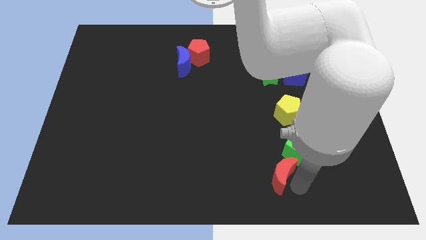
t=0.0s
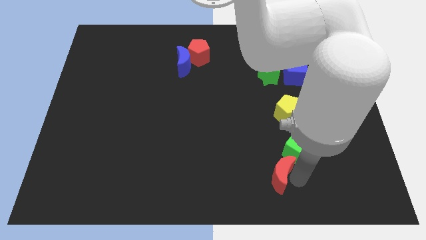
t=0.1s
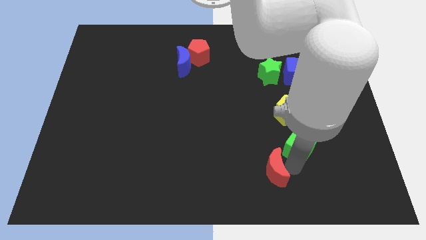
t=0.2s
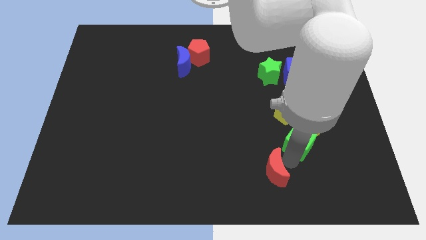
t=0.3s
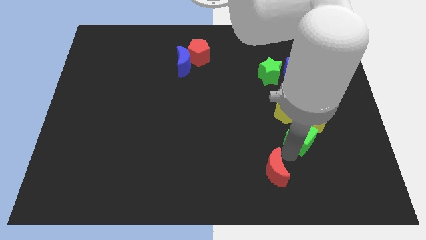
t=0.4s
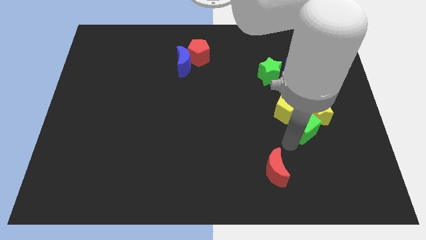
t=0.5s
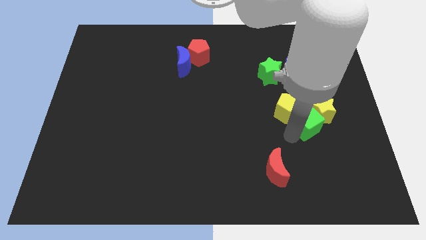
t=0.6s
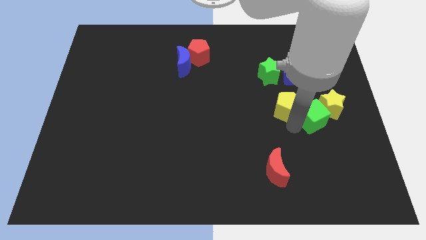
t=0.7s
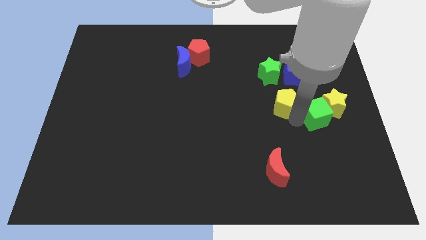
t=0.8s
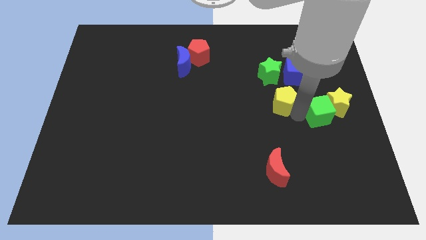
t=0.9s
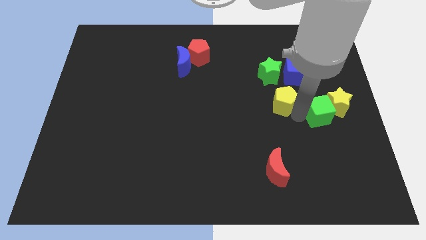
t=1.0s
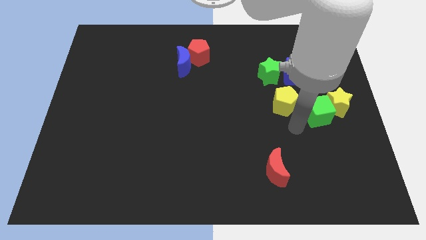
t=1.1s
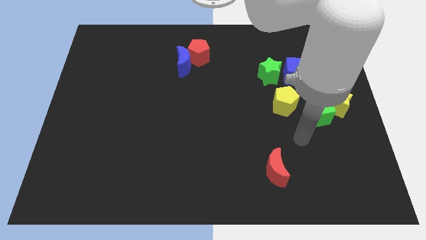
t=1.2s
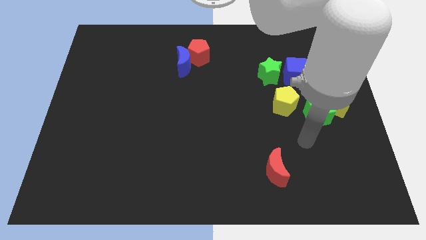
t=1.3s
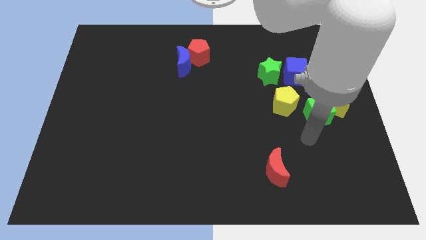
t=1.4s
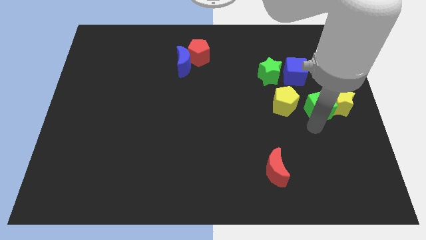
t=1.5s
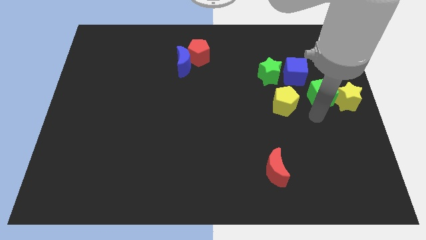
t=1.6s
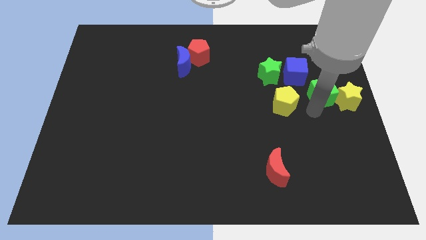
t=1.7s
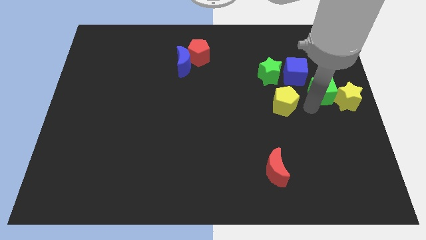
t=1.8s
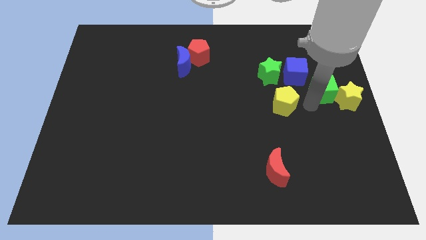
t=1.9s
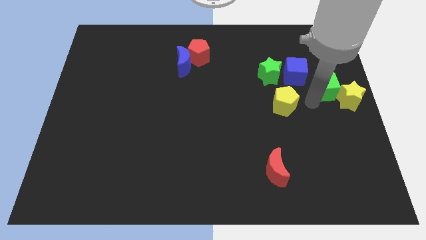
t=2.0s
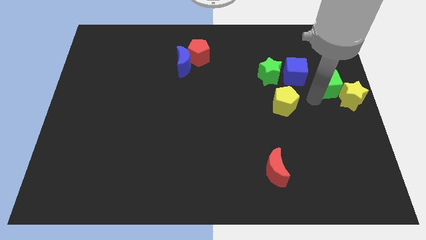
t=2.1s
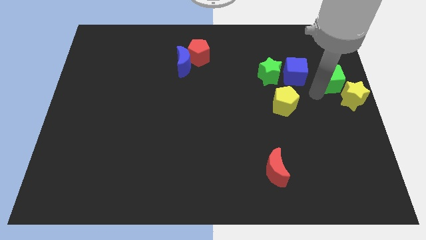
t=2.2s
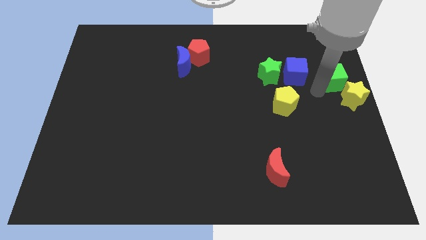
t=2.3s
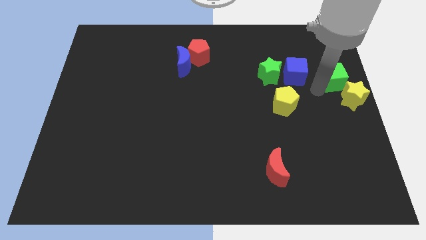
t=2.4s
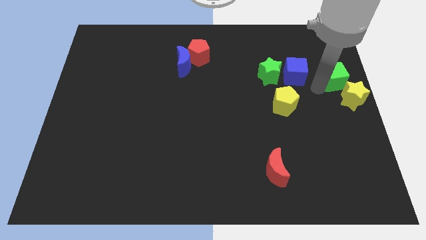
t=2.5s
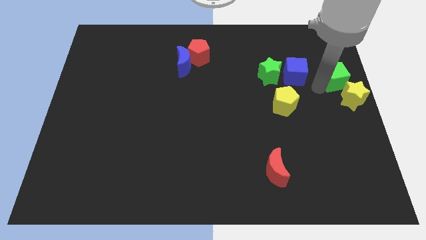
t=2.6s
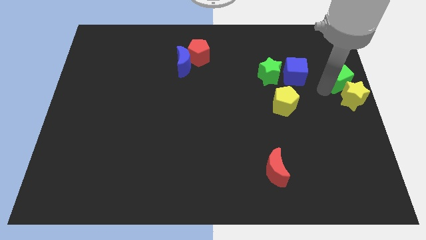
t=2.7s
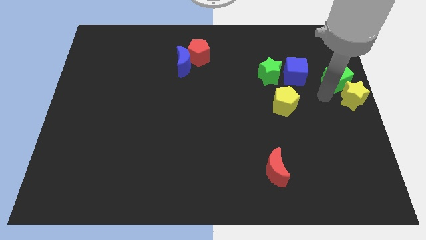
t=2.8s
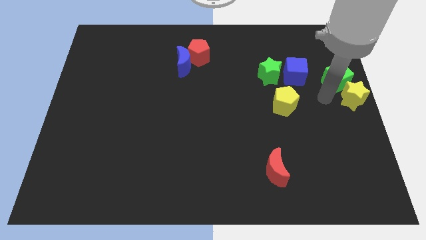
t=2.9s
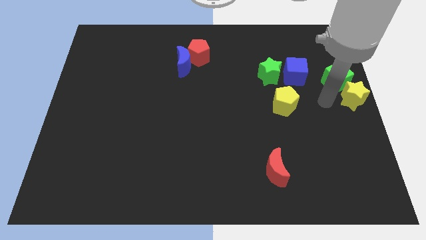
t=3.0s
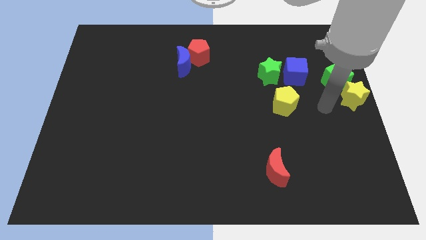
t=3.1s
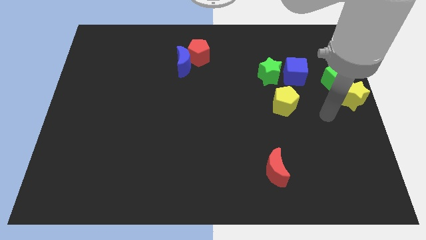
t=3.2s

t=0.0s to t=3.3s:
place green cube parallel right to blue cube

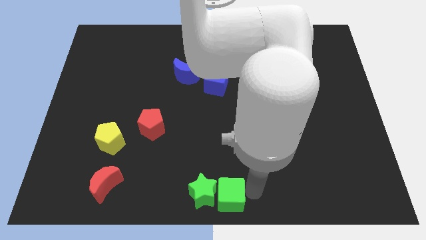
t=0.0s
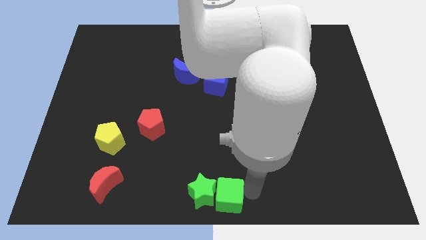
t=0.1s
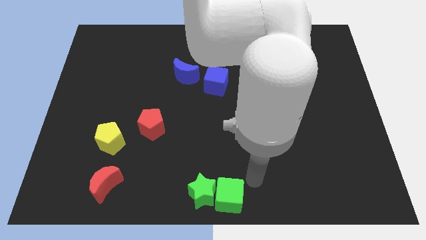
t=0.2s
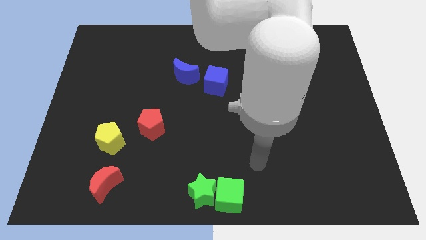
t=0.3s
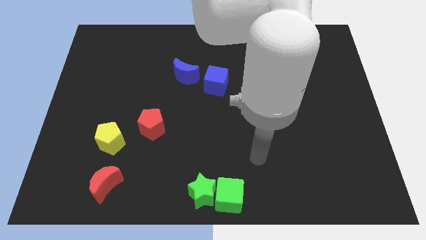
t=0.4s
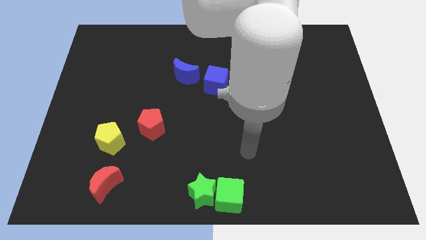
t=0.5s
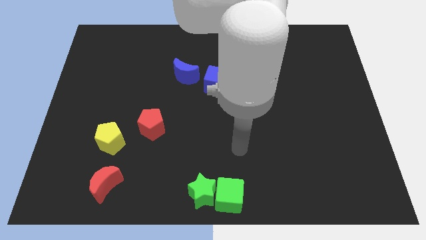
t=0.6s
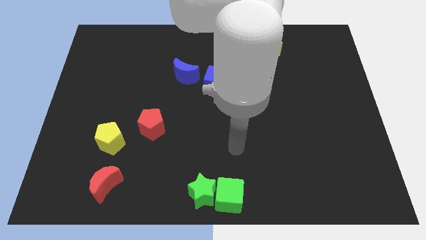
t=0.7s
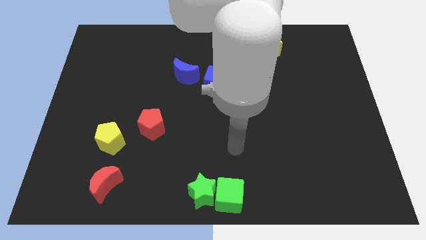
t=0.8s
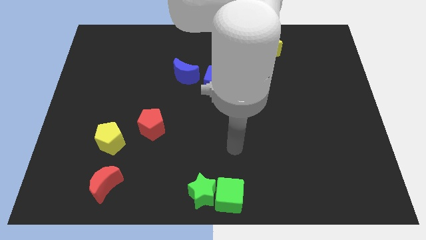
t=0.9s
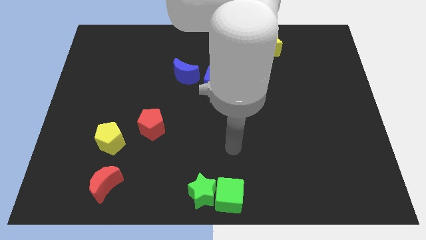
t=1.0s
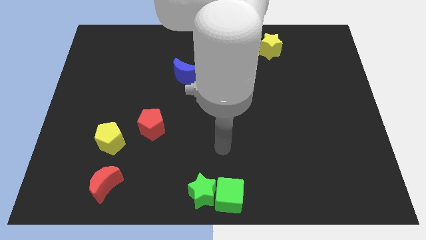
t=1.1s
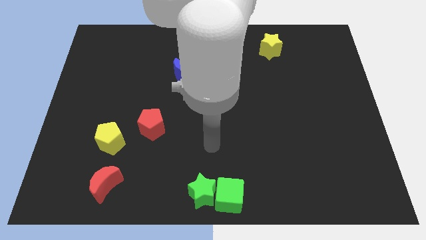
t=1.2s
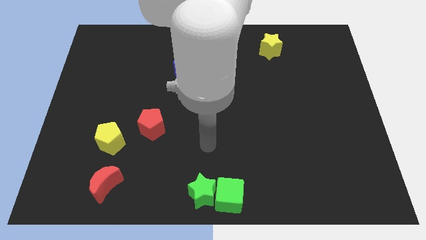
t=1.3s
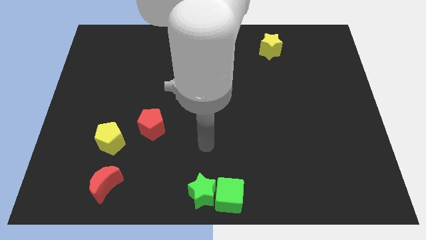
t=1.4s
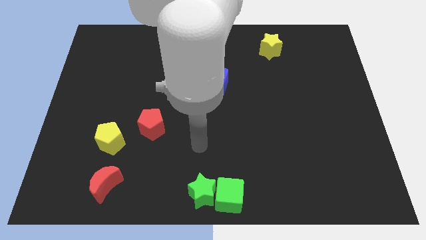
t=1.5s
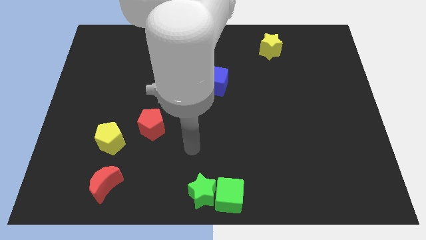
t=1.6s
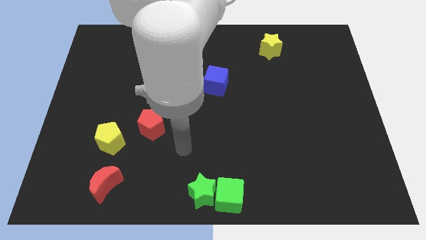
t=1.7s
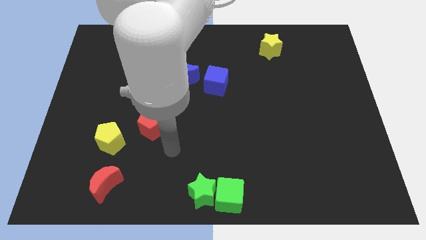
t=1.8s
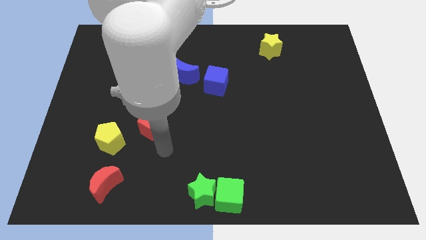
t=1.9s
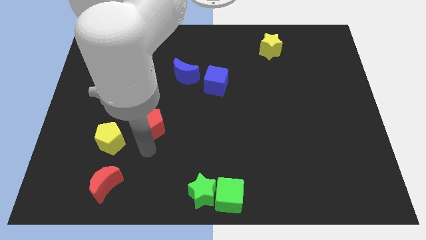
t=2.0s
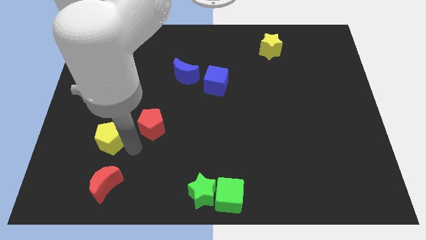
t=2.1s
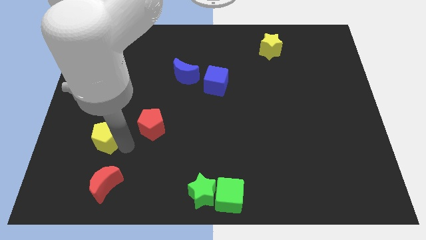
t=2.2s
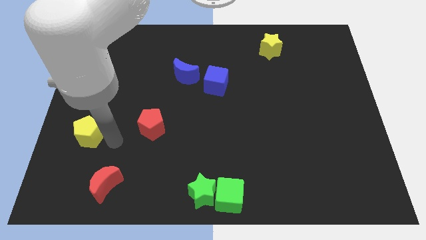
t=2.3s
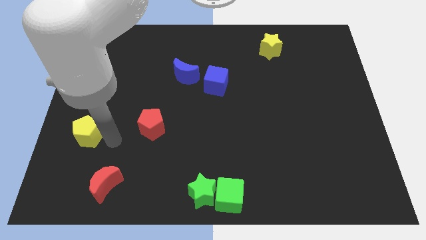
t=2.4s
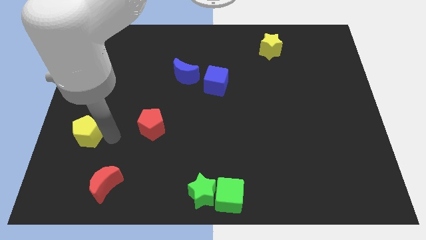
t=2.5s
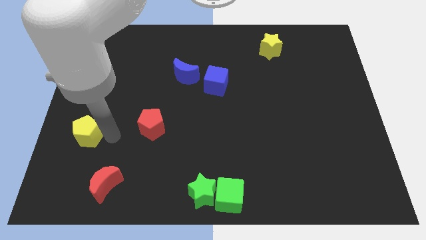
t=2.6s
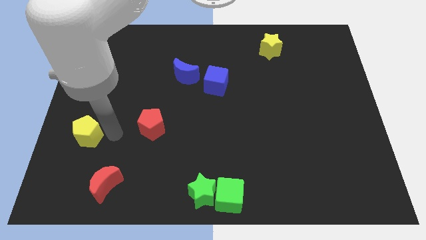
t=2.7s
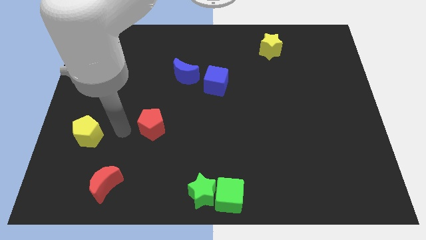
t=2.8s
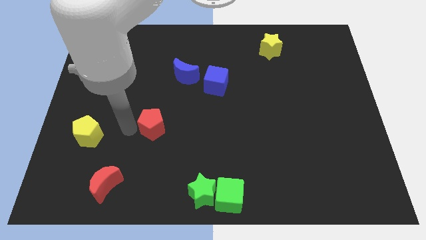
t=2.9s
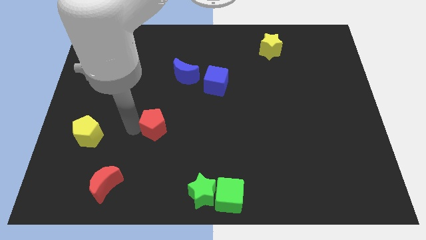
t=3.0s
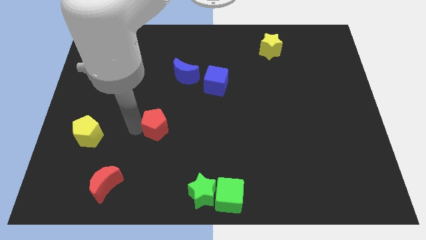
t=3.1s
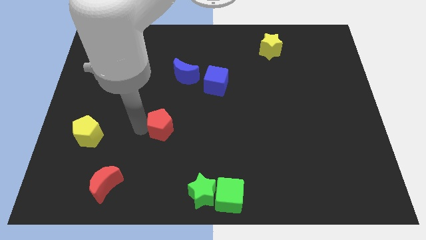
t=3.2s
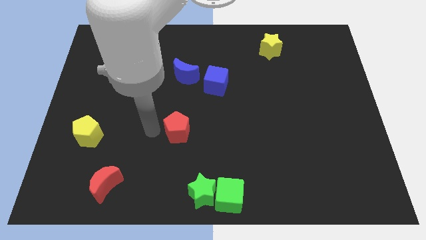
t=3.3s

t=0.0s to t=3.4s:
push red pentagon below blue crescent

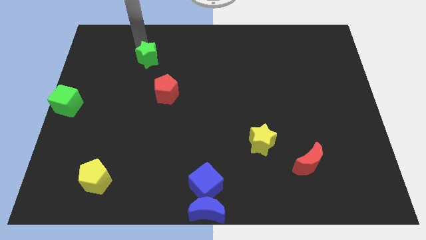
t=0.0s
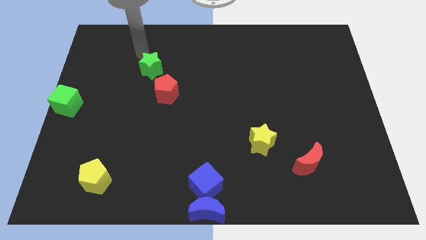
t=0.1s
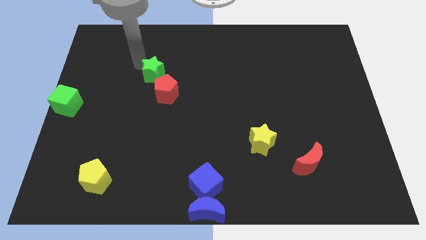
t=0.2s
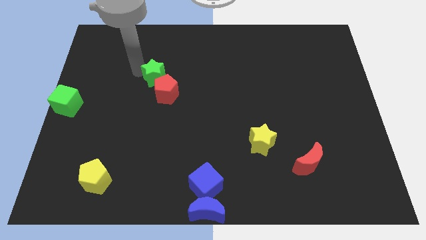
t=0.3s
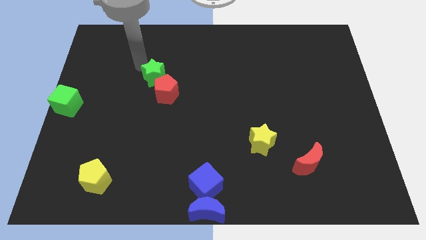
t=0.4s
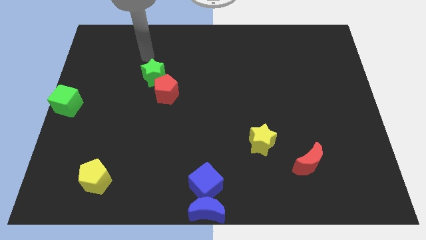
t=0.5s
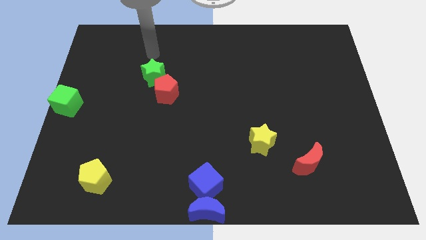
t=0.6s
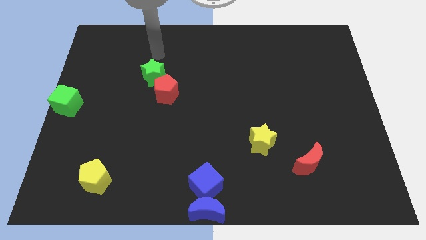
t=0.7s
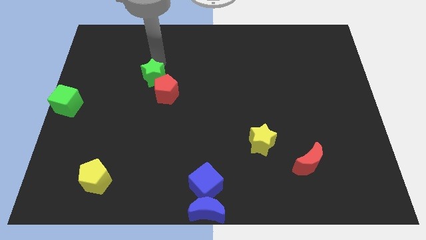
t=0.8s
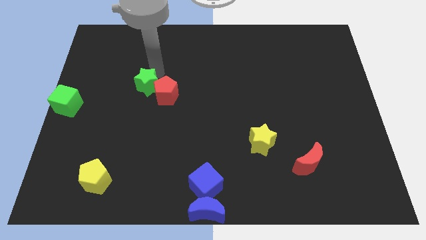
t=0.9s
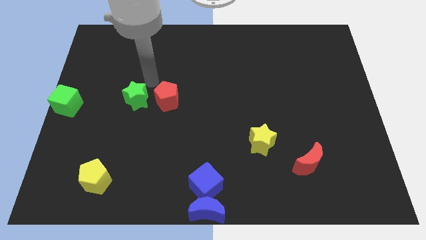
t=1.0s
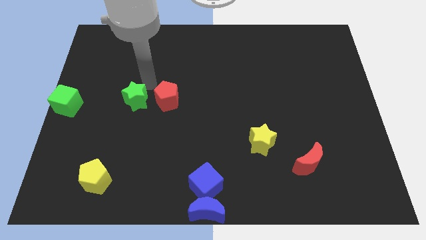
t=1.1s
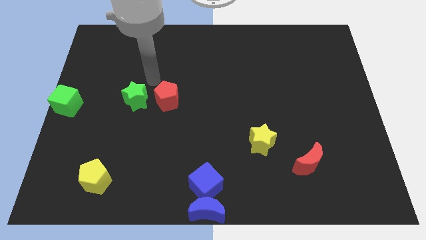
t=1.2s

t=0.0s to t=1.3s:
push the green star into the red pentagon

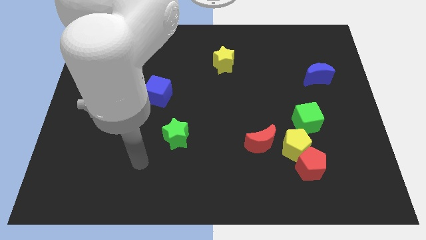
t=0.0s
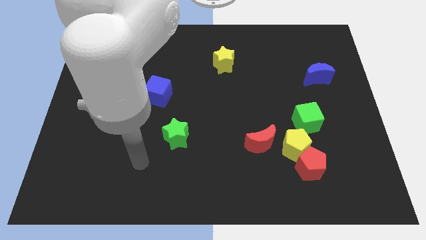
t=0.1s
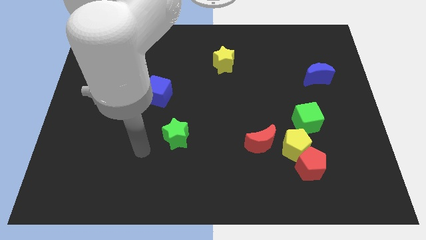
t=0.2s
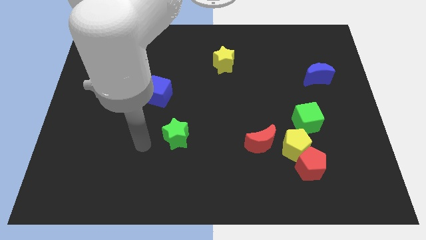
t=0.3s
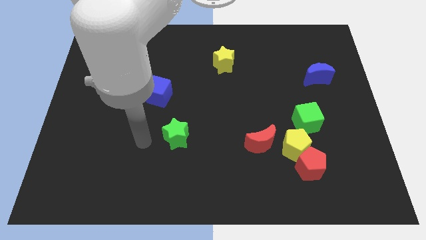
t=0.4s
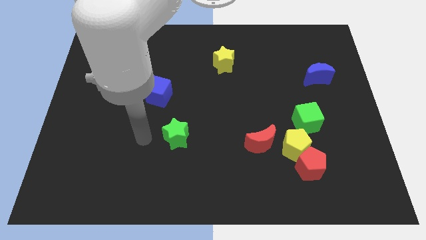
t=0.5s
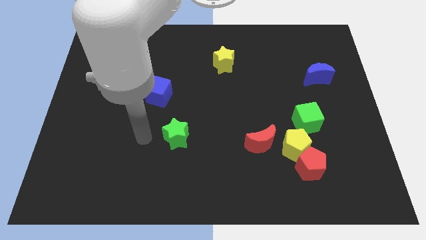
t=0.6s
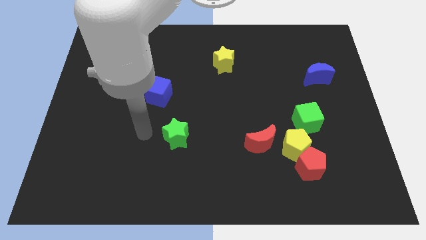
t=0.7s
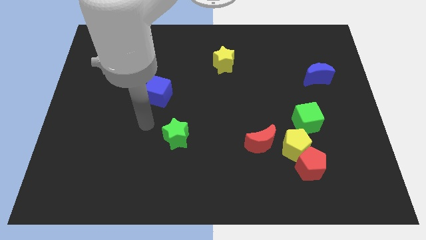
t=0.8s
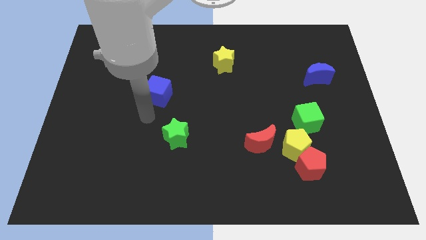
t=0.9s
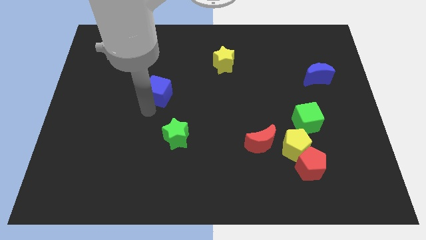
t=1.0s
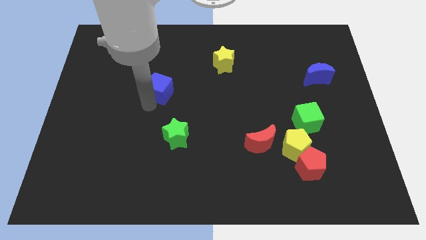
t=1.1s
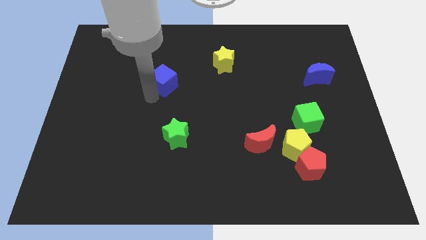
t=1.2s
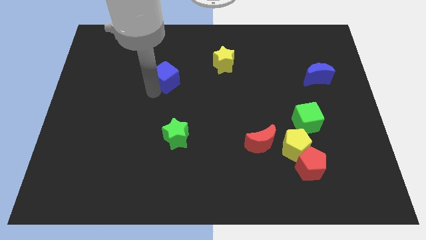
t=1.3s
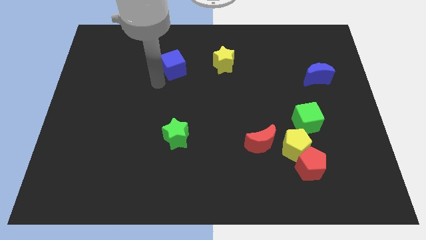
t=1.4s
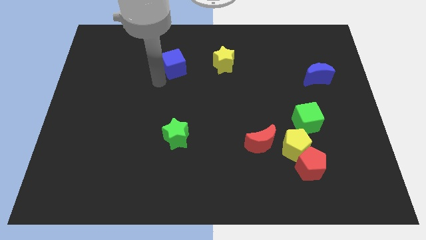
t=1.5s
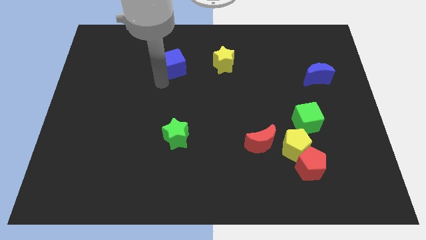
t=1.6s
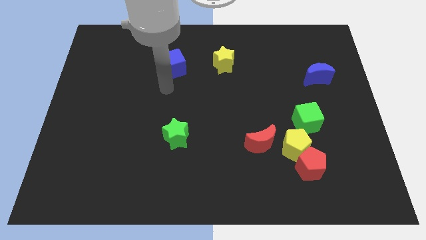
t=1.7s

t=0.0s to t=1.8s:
place the blue cube parallel to the yellow star
